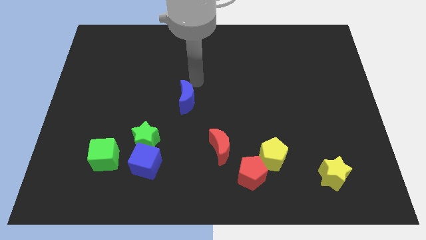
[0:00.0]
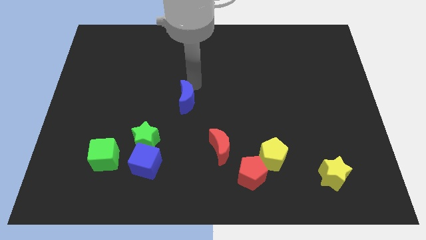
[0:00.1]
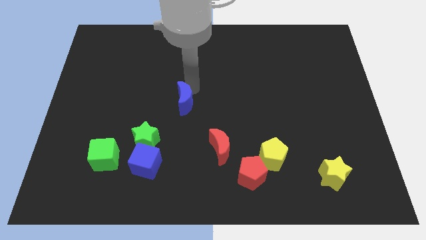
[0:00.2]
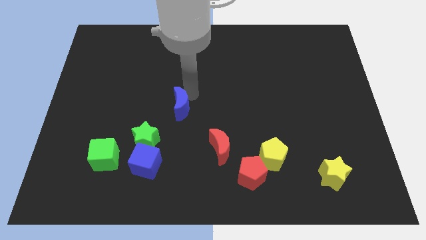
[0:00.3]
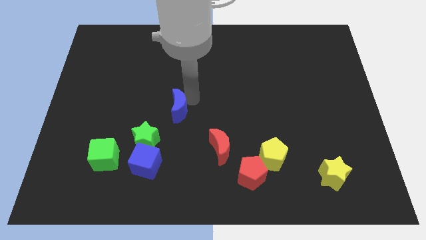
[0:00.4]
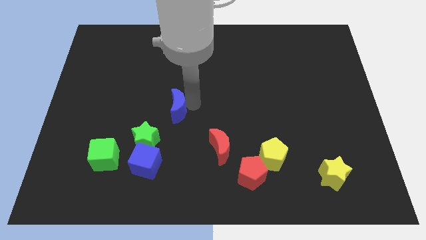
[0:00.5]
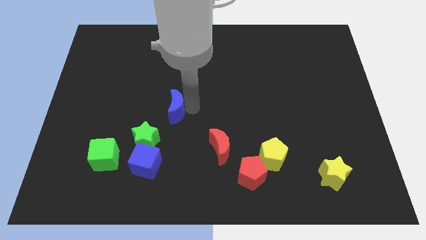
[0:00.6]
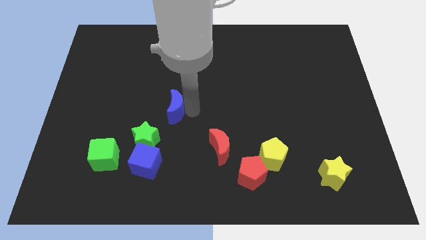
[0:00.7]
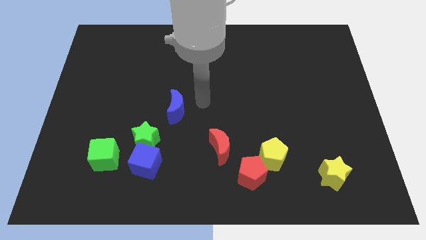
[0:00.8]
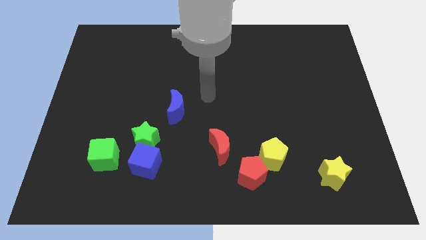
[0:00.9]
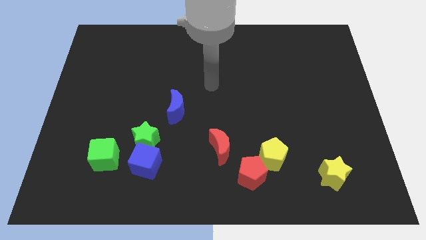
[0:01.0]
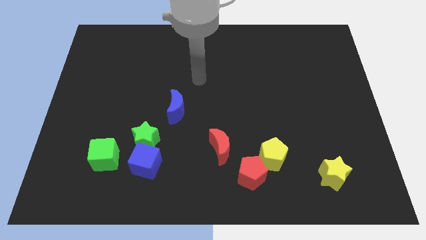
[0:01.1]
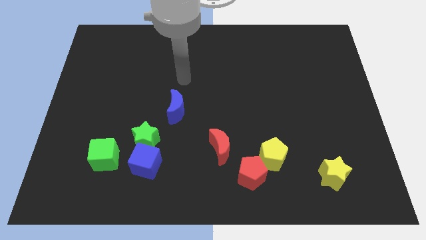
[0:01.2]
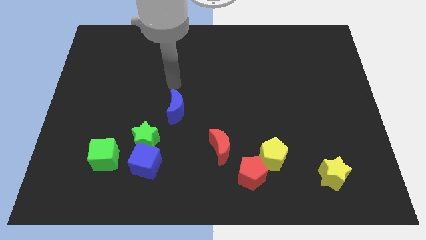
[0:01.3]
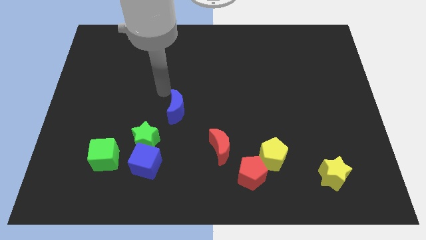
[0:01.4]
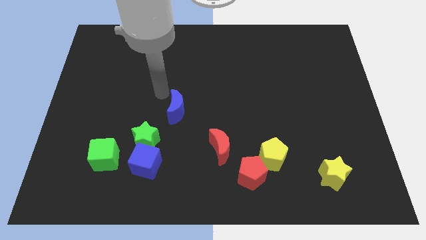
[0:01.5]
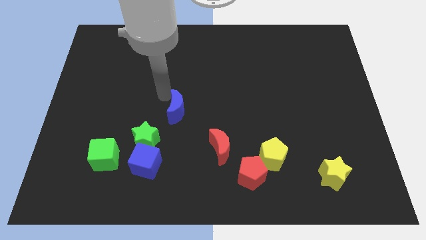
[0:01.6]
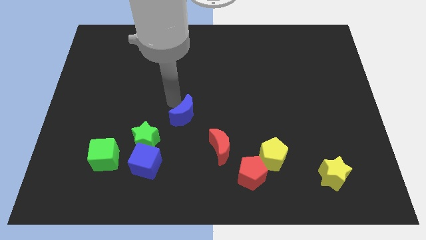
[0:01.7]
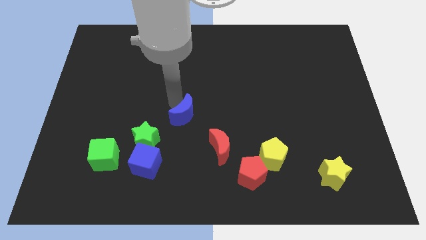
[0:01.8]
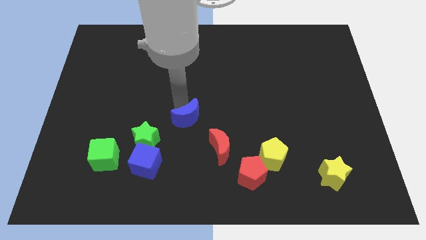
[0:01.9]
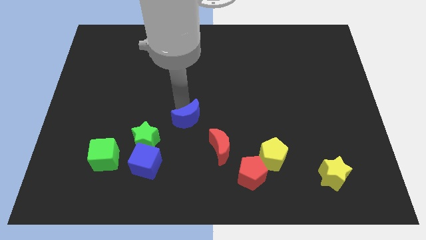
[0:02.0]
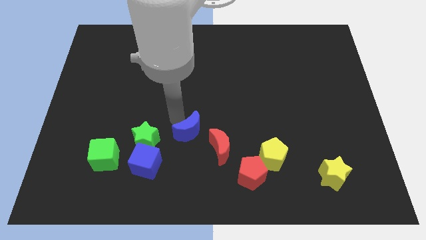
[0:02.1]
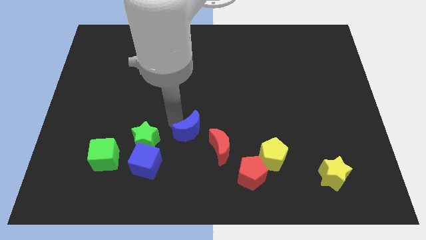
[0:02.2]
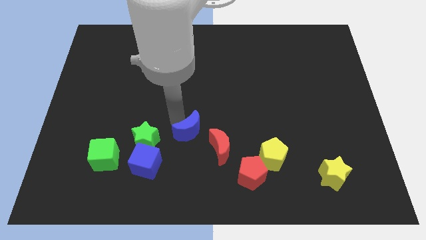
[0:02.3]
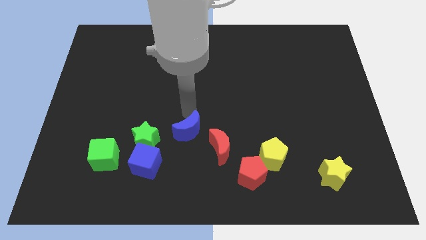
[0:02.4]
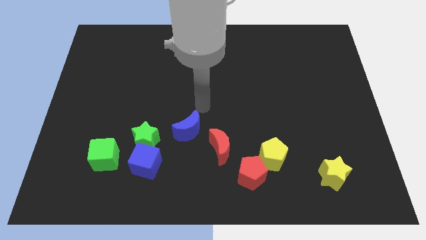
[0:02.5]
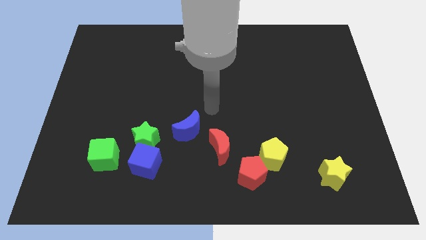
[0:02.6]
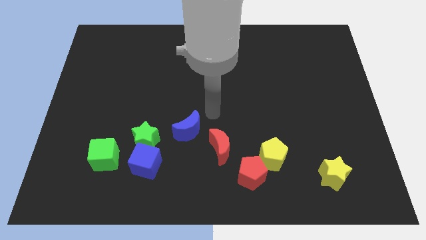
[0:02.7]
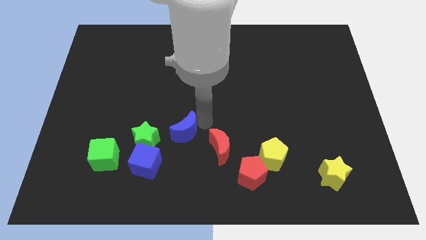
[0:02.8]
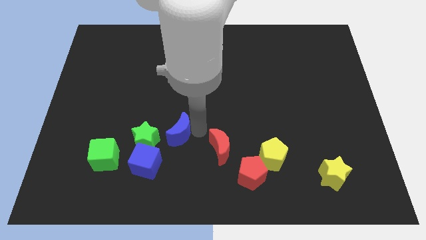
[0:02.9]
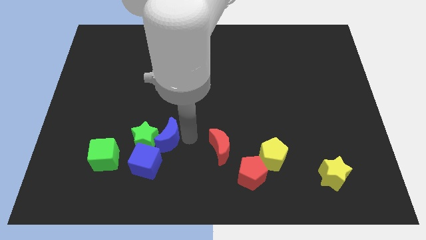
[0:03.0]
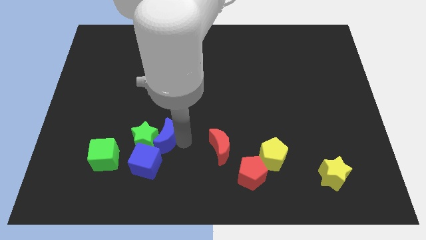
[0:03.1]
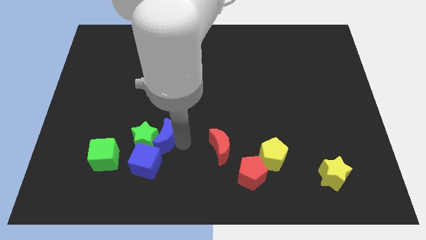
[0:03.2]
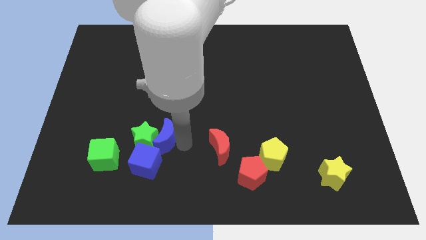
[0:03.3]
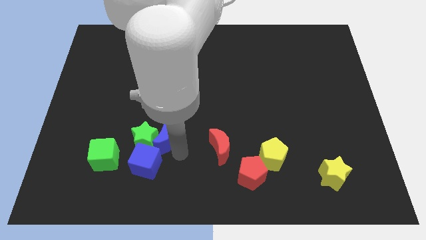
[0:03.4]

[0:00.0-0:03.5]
put the blue crescent to the right of the green star

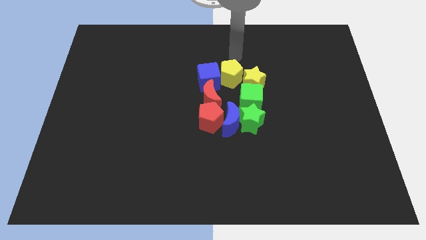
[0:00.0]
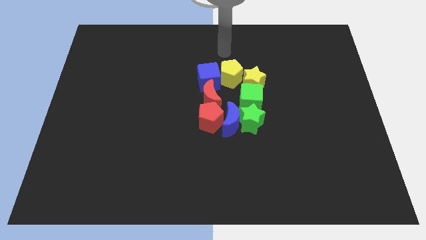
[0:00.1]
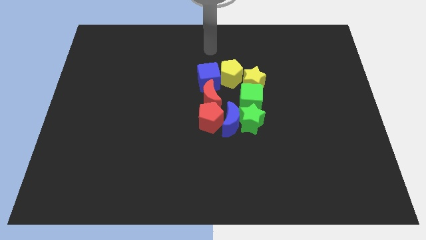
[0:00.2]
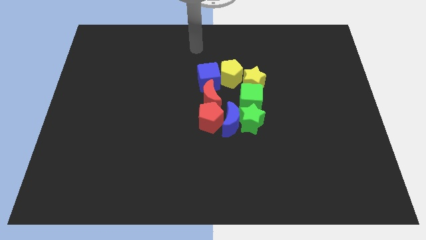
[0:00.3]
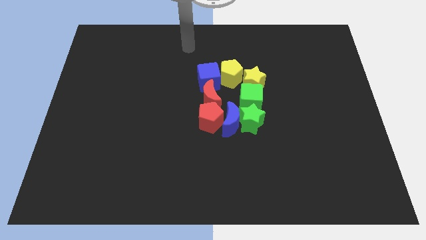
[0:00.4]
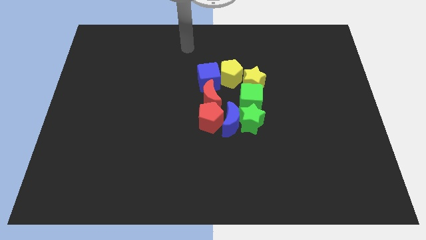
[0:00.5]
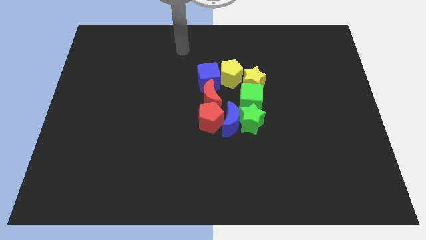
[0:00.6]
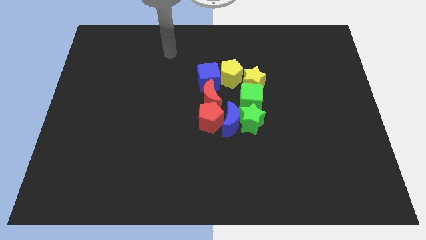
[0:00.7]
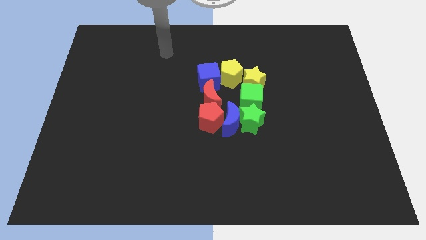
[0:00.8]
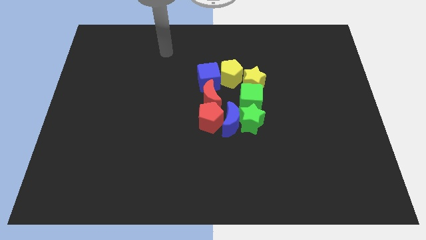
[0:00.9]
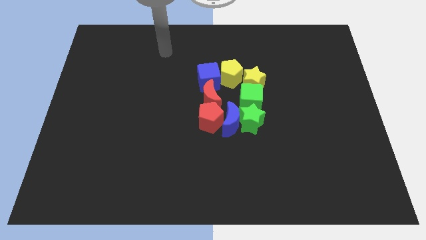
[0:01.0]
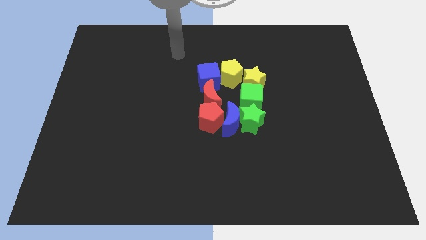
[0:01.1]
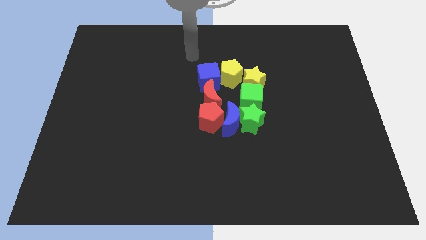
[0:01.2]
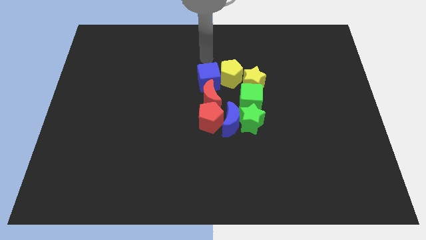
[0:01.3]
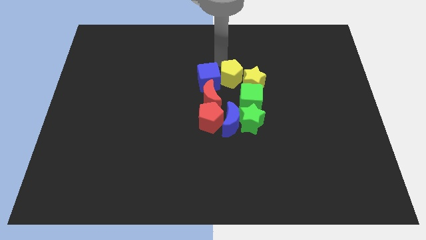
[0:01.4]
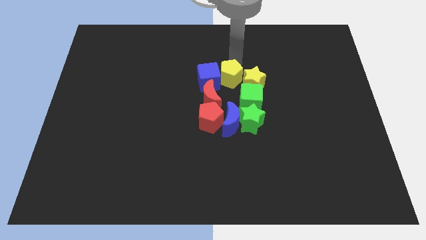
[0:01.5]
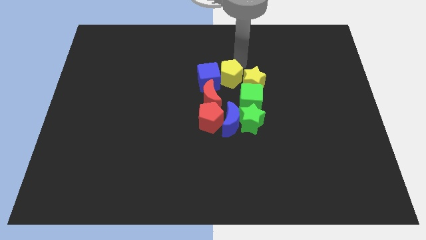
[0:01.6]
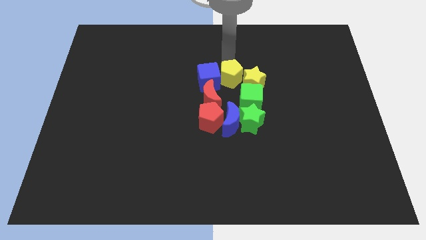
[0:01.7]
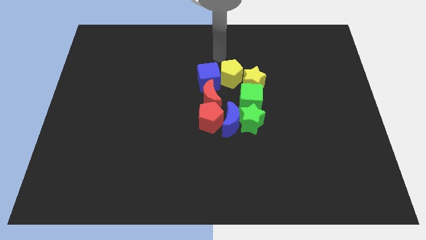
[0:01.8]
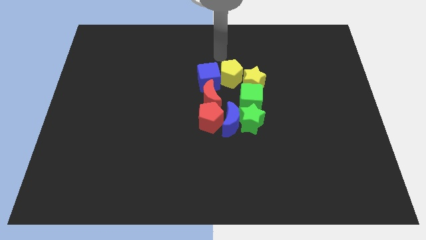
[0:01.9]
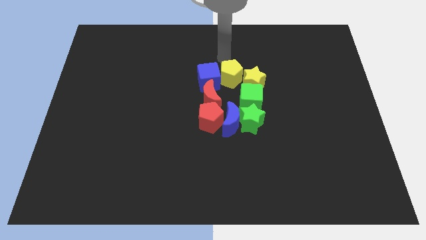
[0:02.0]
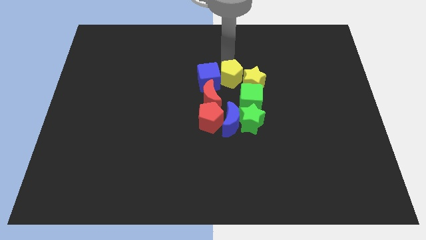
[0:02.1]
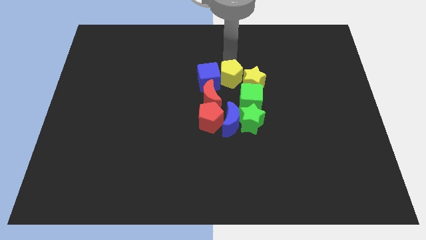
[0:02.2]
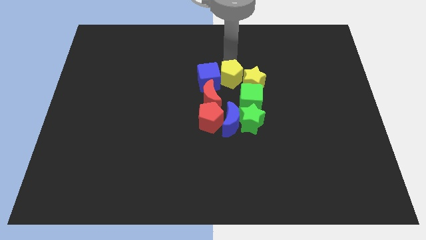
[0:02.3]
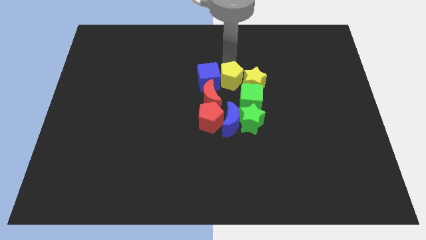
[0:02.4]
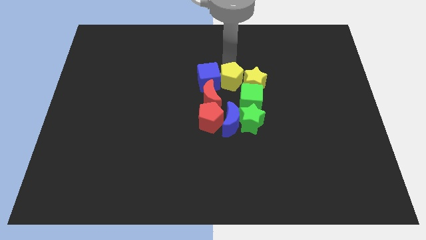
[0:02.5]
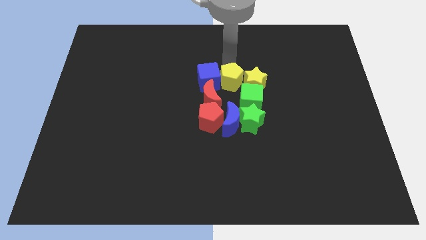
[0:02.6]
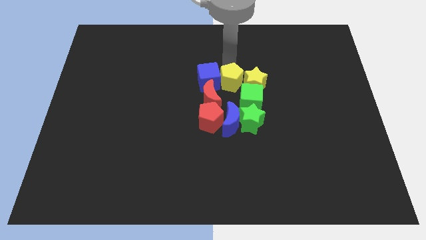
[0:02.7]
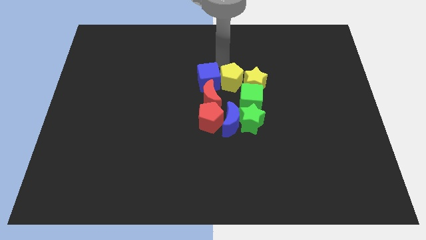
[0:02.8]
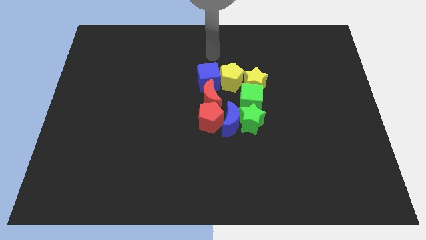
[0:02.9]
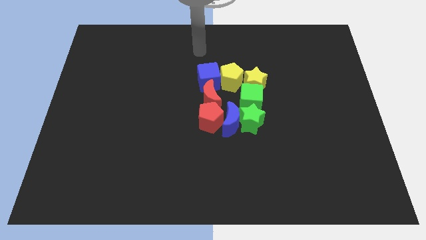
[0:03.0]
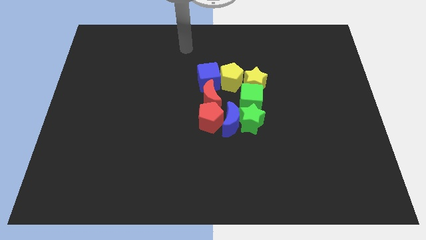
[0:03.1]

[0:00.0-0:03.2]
slightly push the yellow pentagon down

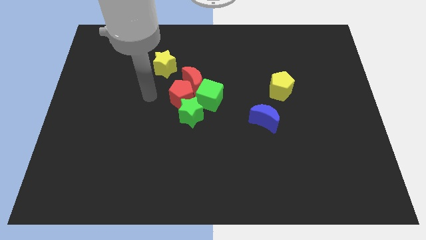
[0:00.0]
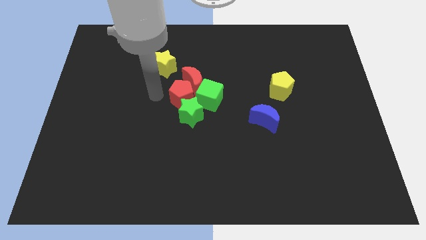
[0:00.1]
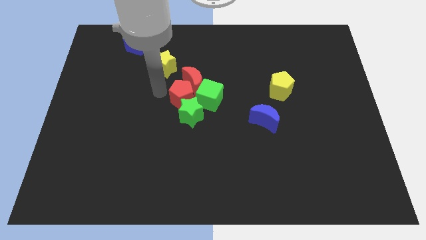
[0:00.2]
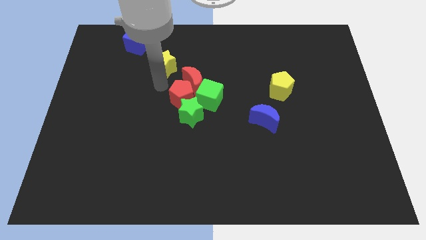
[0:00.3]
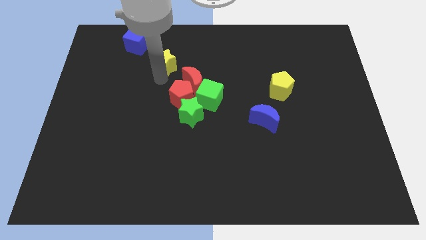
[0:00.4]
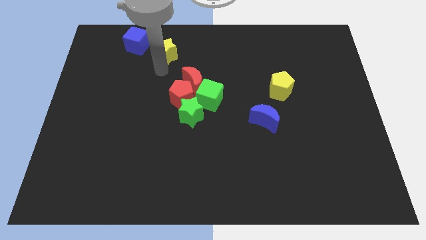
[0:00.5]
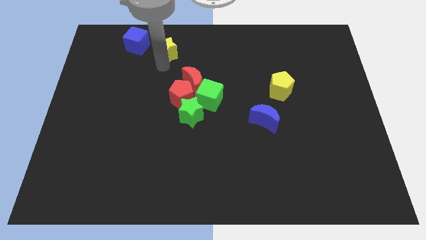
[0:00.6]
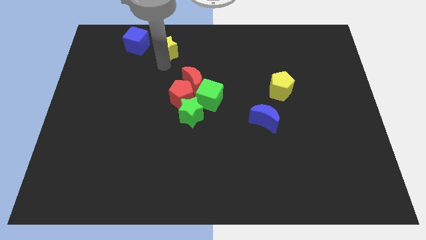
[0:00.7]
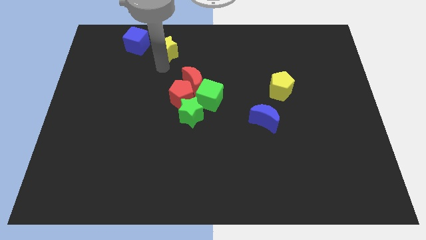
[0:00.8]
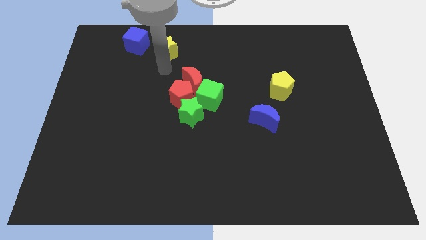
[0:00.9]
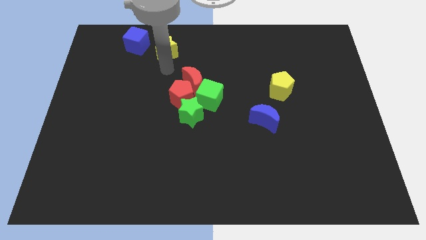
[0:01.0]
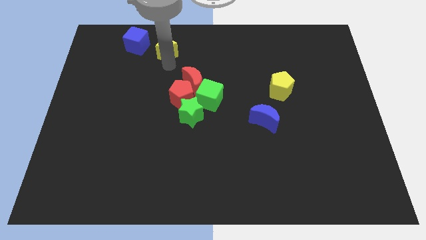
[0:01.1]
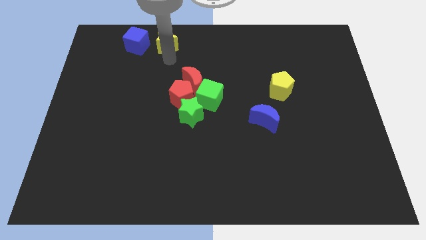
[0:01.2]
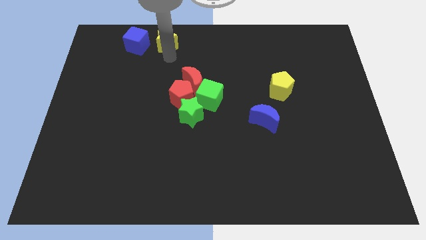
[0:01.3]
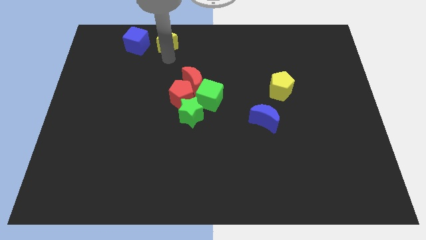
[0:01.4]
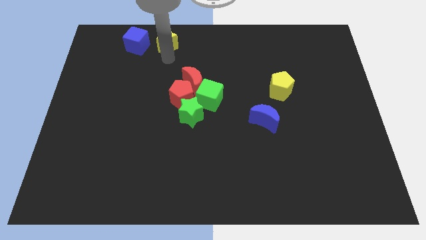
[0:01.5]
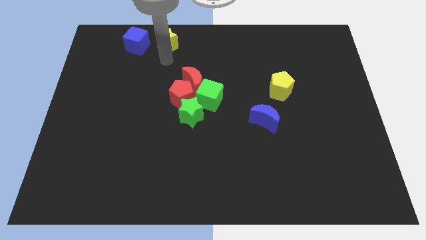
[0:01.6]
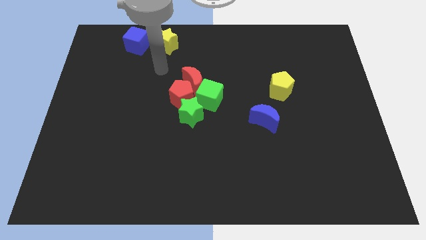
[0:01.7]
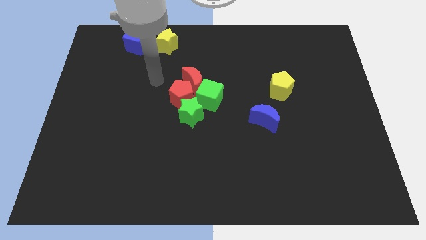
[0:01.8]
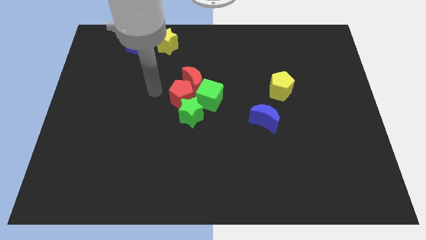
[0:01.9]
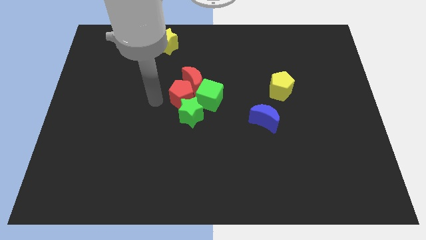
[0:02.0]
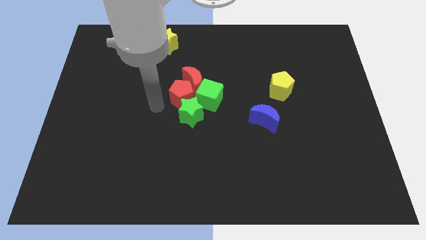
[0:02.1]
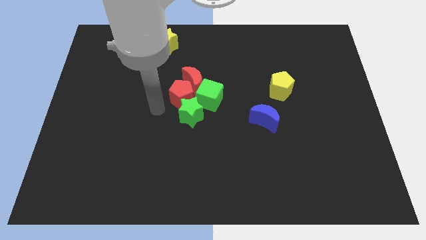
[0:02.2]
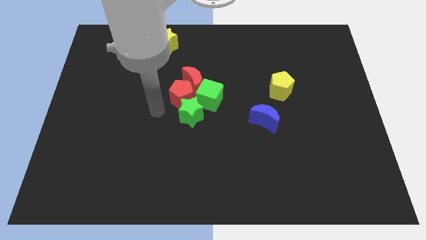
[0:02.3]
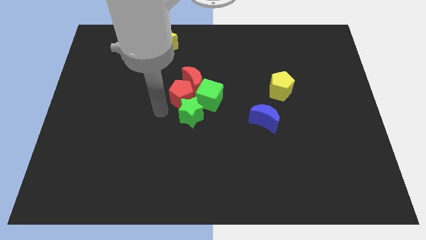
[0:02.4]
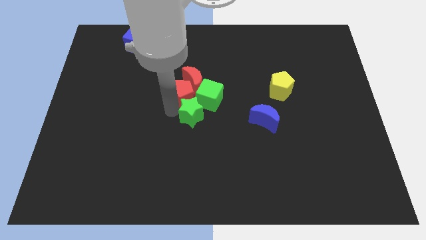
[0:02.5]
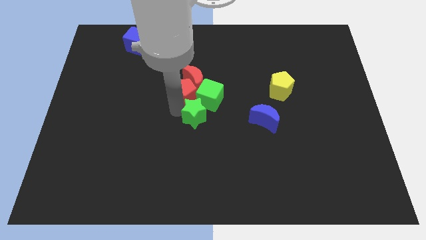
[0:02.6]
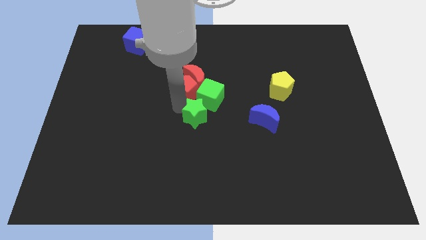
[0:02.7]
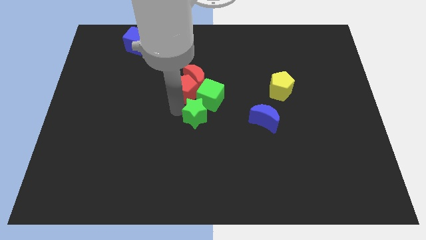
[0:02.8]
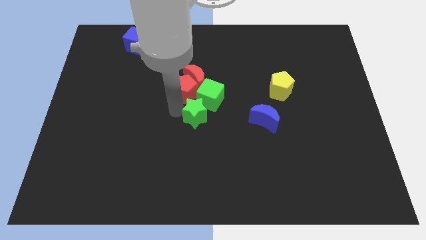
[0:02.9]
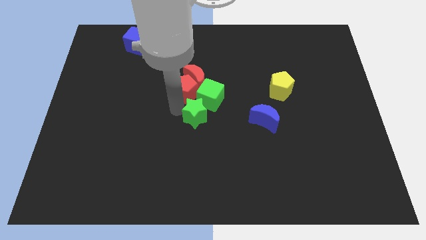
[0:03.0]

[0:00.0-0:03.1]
place the yellow star to the right of the blue cube
